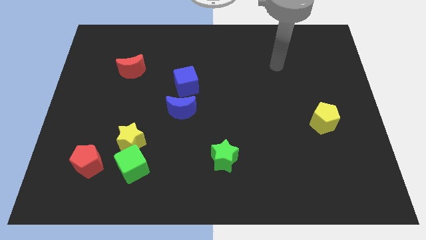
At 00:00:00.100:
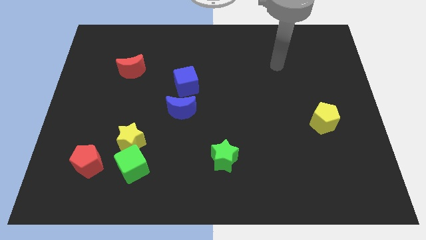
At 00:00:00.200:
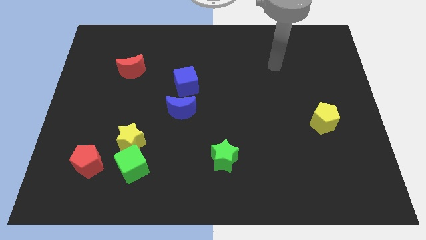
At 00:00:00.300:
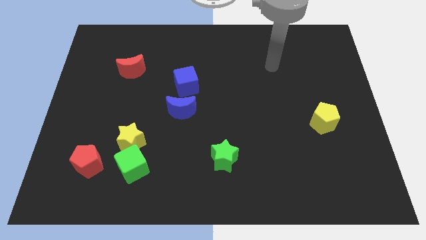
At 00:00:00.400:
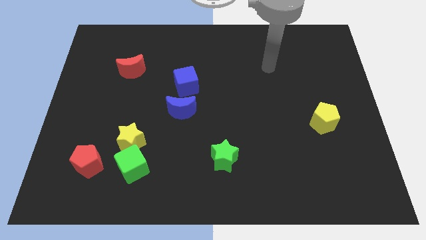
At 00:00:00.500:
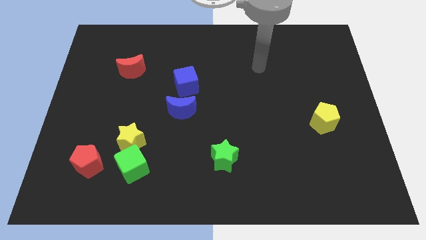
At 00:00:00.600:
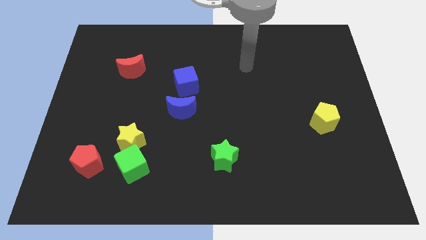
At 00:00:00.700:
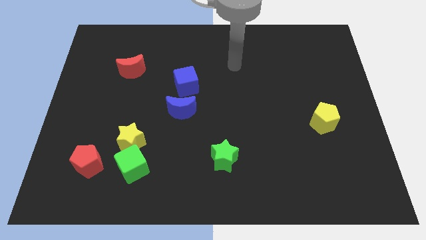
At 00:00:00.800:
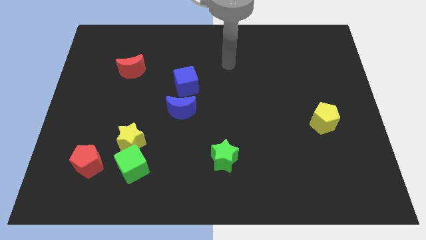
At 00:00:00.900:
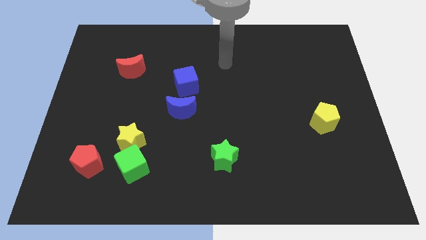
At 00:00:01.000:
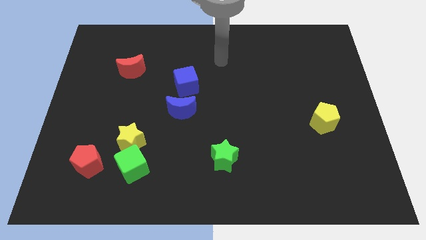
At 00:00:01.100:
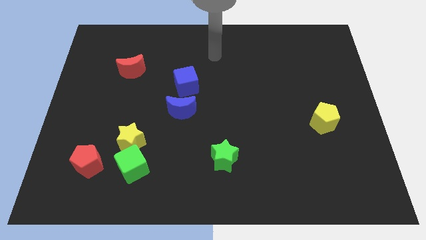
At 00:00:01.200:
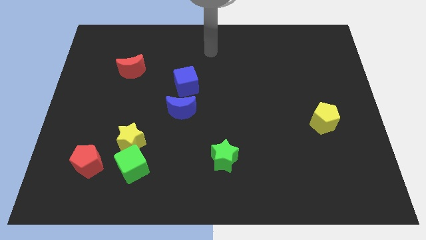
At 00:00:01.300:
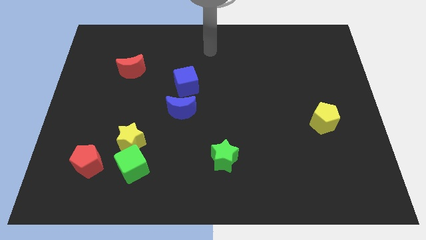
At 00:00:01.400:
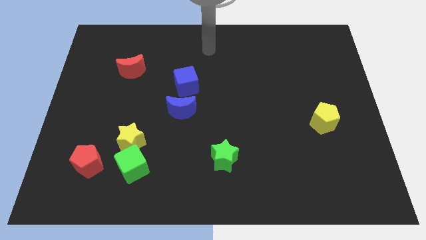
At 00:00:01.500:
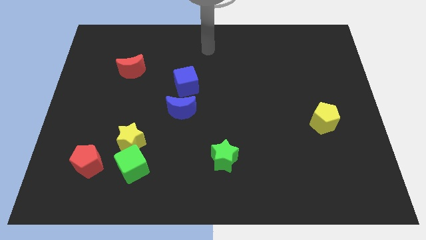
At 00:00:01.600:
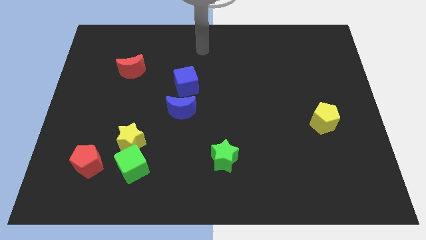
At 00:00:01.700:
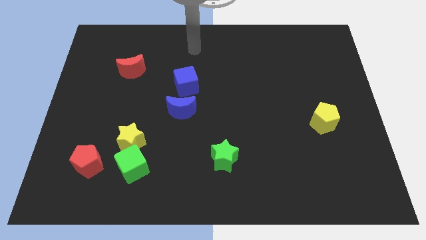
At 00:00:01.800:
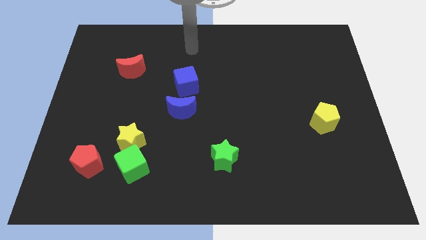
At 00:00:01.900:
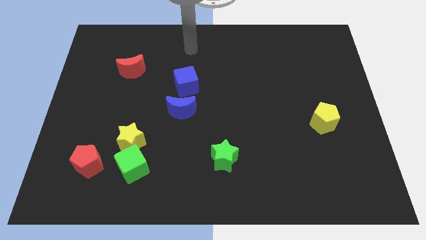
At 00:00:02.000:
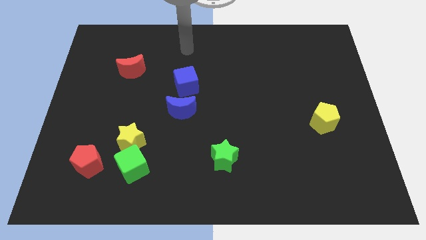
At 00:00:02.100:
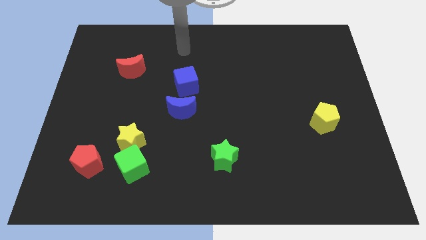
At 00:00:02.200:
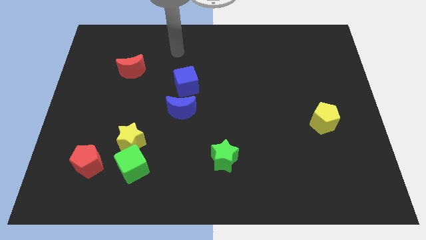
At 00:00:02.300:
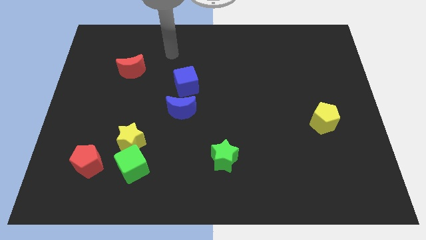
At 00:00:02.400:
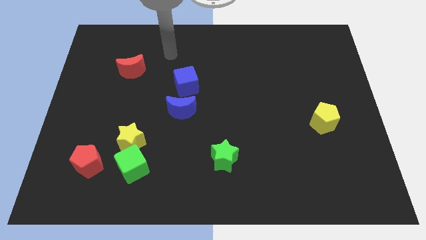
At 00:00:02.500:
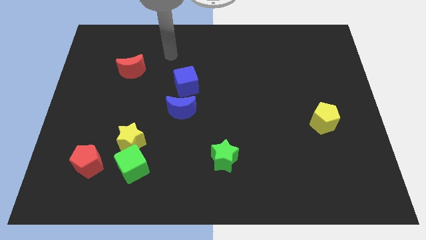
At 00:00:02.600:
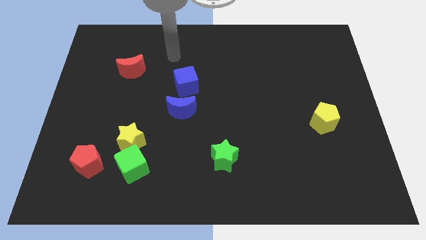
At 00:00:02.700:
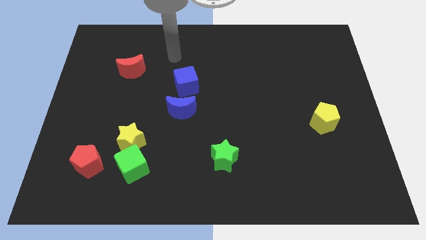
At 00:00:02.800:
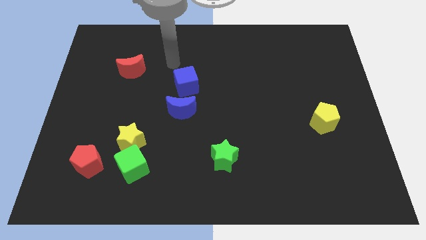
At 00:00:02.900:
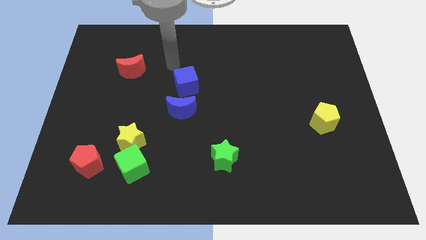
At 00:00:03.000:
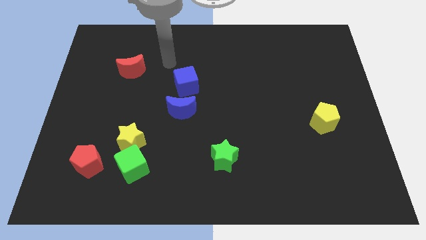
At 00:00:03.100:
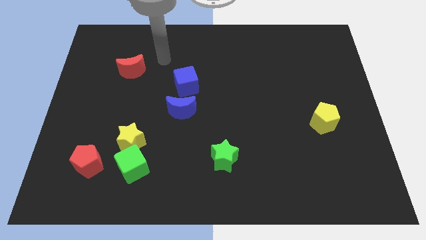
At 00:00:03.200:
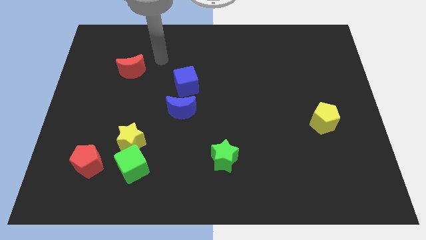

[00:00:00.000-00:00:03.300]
put your arm in between the red moon and the blue cube

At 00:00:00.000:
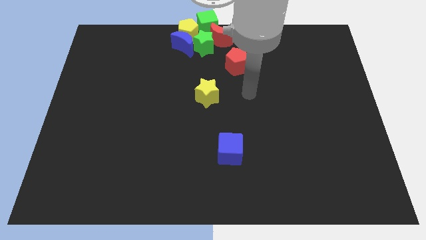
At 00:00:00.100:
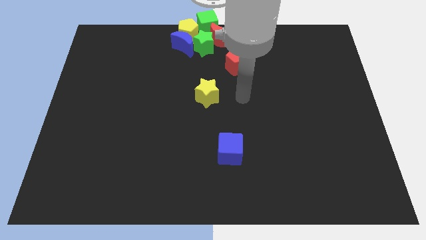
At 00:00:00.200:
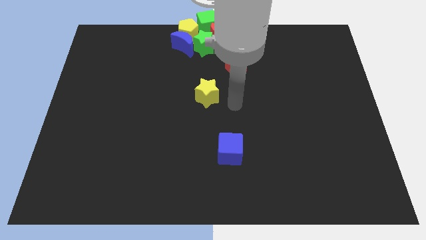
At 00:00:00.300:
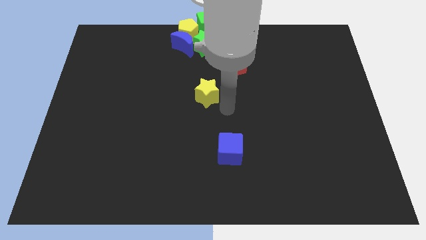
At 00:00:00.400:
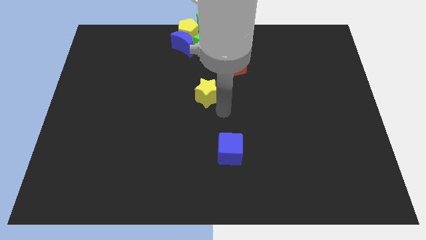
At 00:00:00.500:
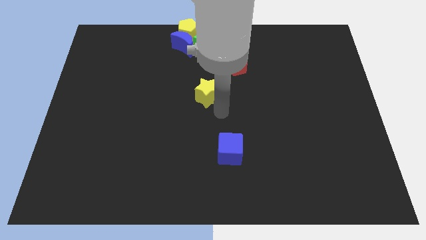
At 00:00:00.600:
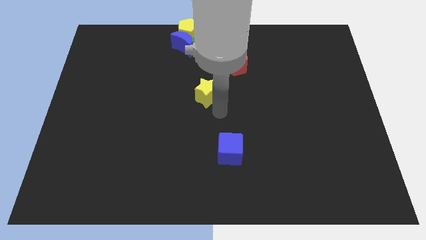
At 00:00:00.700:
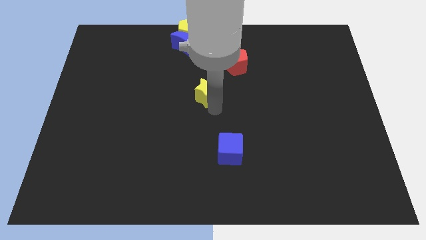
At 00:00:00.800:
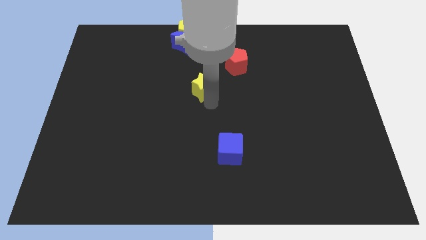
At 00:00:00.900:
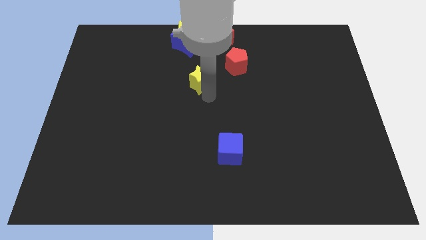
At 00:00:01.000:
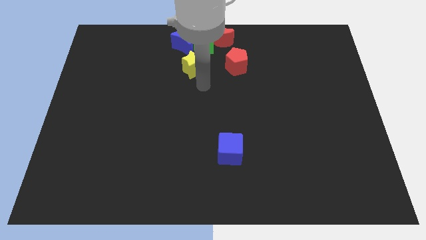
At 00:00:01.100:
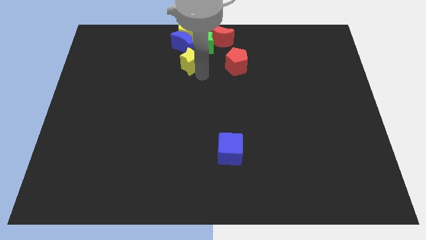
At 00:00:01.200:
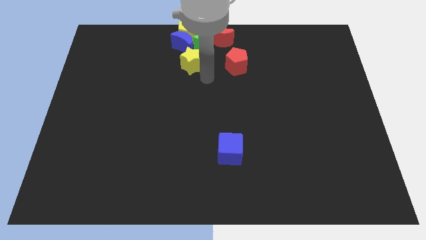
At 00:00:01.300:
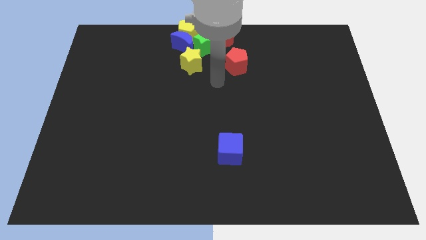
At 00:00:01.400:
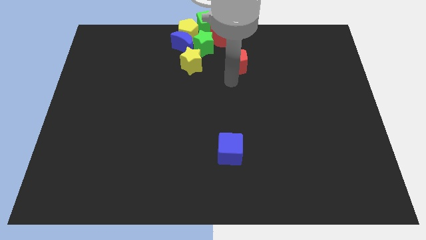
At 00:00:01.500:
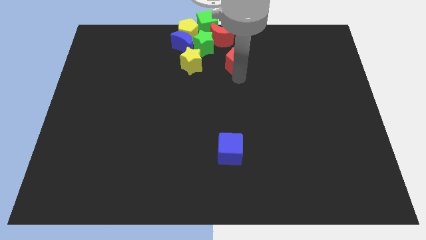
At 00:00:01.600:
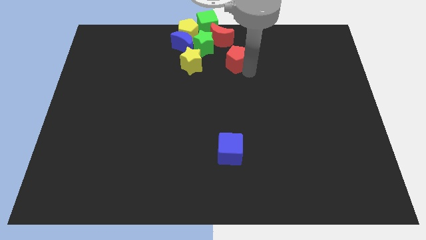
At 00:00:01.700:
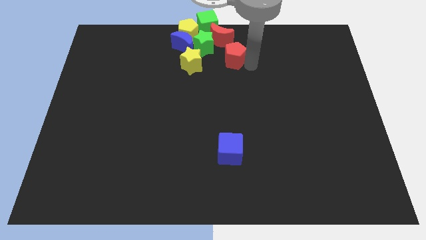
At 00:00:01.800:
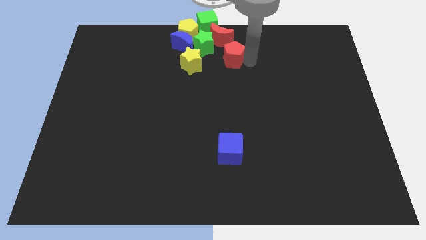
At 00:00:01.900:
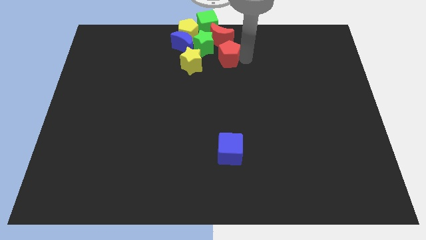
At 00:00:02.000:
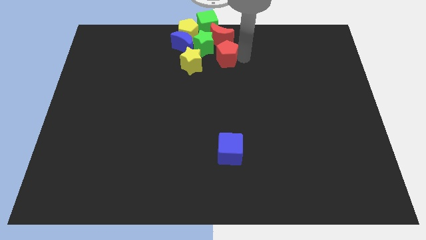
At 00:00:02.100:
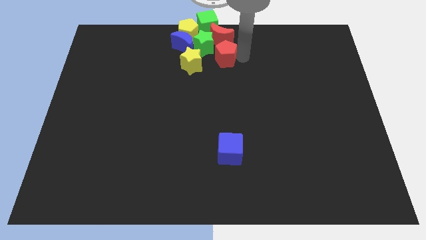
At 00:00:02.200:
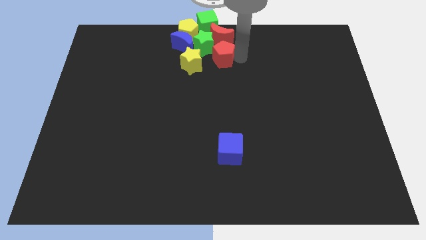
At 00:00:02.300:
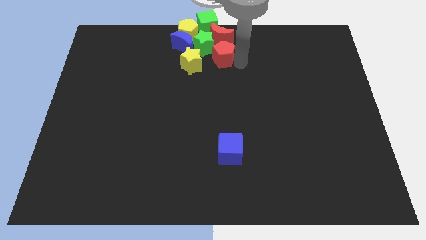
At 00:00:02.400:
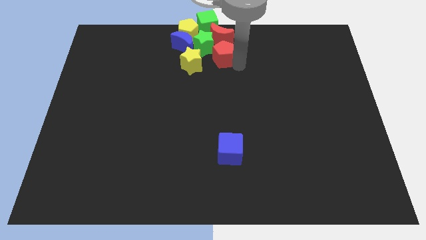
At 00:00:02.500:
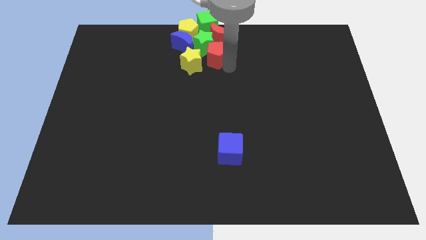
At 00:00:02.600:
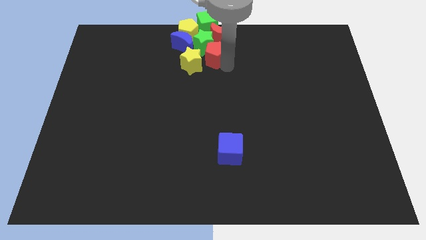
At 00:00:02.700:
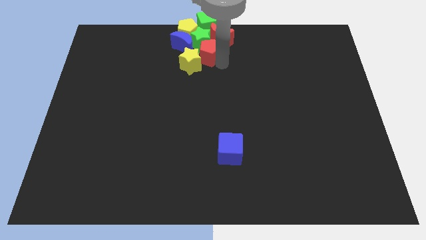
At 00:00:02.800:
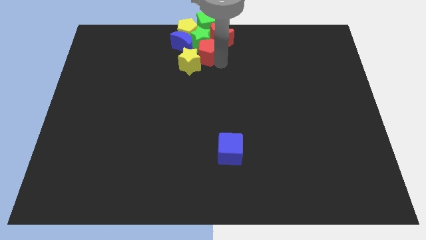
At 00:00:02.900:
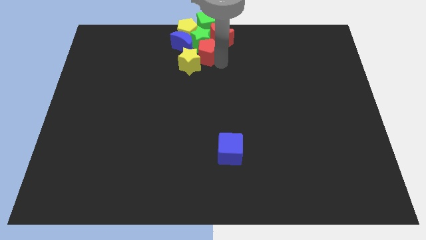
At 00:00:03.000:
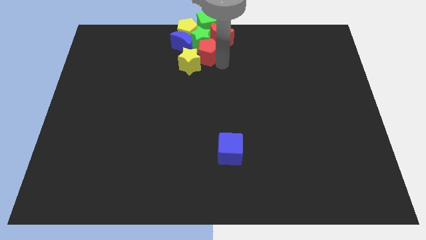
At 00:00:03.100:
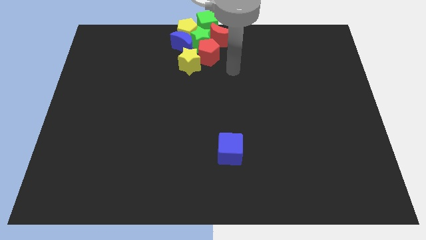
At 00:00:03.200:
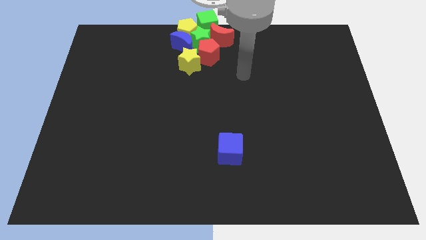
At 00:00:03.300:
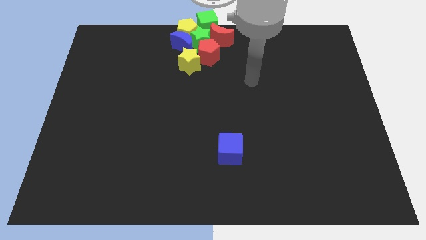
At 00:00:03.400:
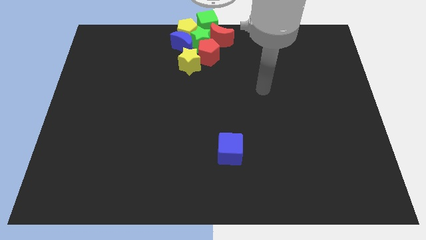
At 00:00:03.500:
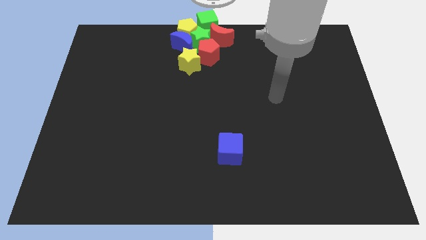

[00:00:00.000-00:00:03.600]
push the yellow star and red pentagon to the top center of the board

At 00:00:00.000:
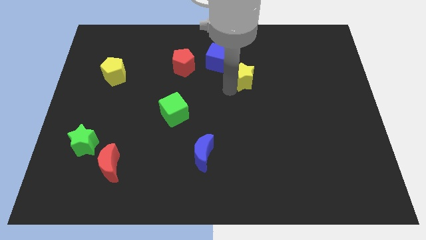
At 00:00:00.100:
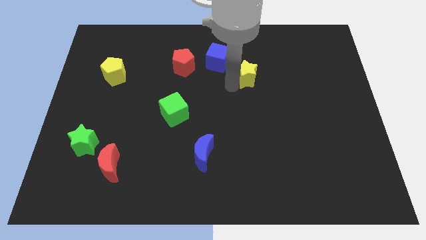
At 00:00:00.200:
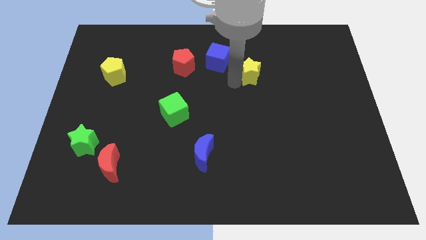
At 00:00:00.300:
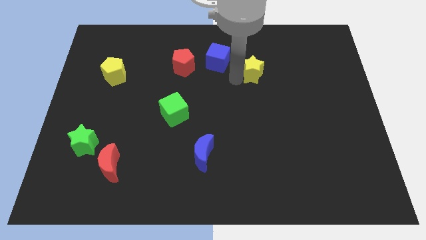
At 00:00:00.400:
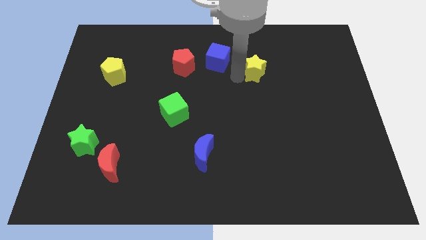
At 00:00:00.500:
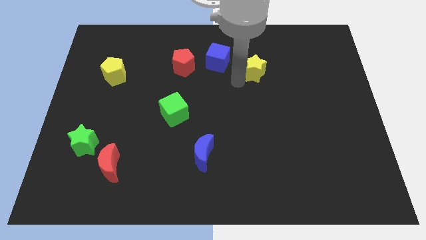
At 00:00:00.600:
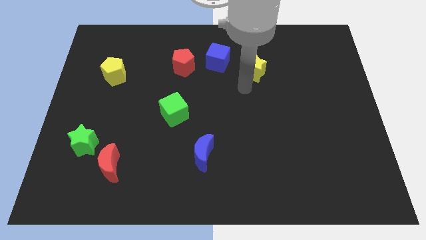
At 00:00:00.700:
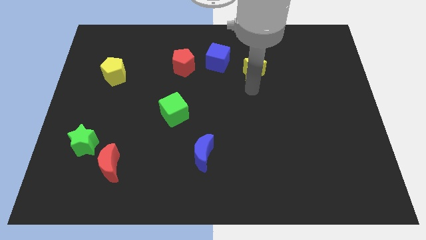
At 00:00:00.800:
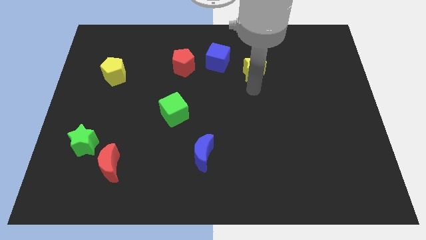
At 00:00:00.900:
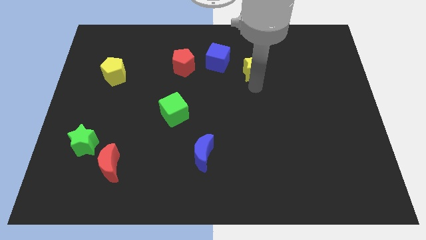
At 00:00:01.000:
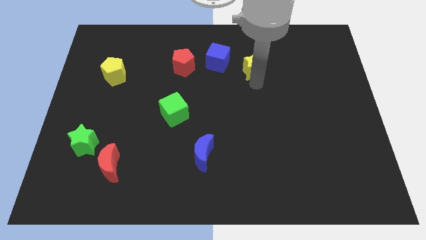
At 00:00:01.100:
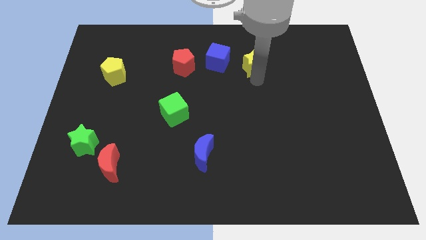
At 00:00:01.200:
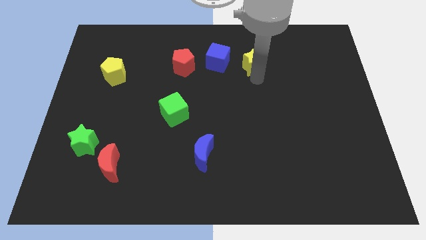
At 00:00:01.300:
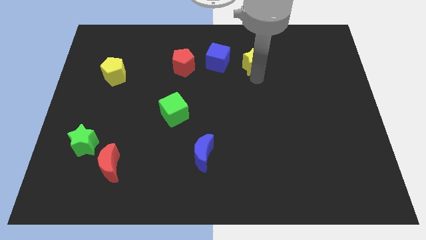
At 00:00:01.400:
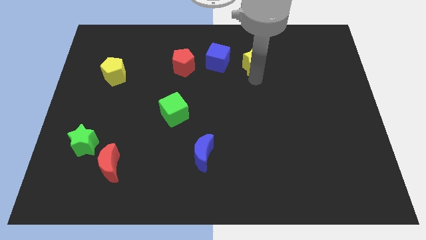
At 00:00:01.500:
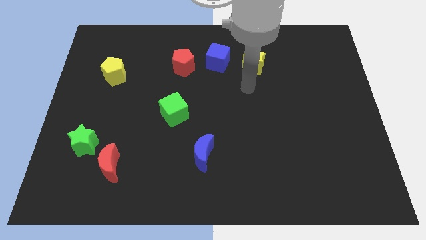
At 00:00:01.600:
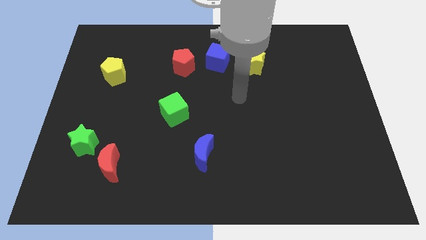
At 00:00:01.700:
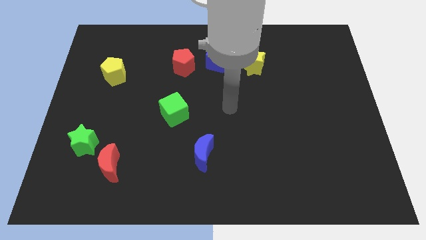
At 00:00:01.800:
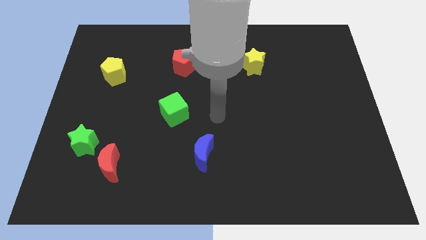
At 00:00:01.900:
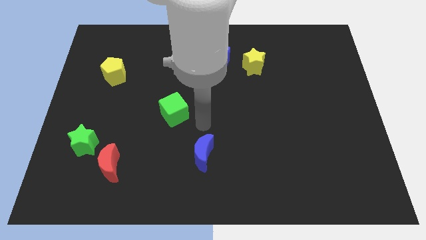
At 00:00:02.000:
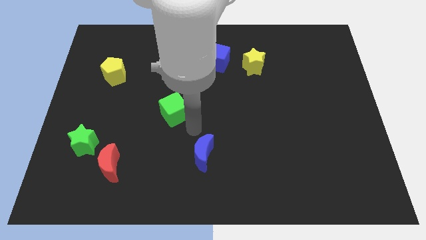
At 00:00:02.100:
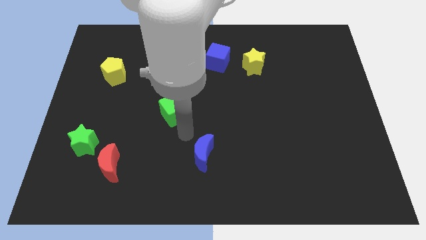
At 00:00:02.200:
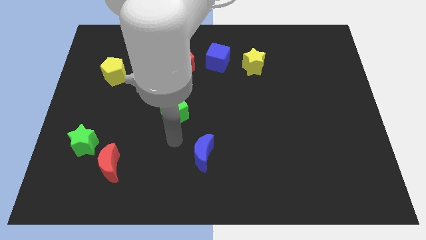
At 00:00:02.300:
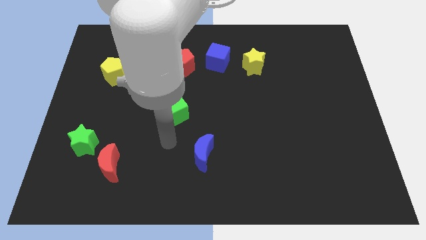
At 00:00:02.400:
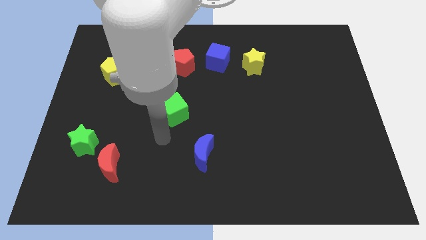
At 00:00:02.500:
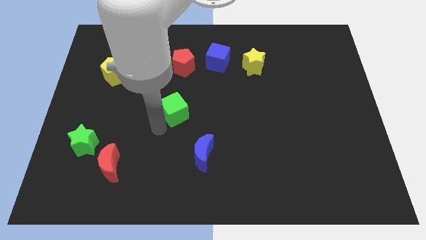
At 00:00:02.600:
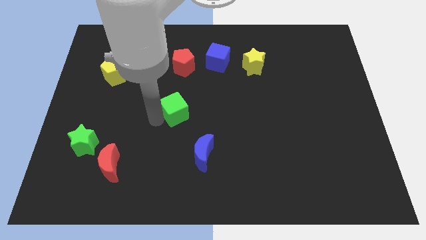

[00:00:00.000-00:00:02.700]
slightly push the yellow star to the right of blue cube
